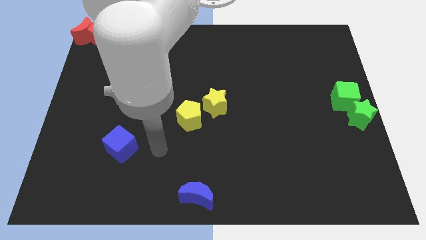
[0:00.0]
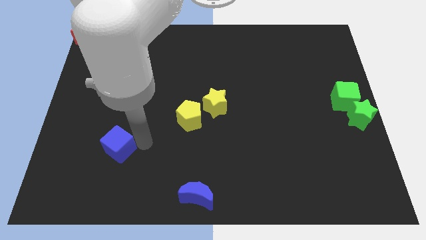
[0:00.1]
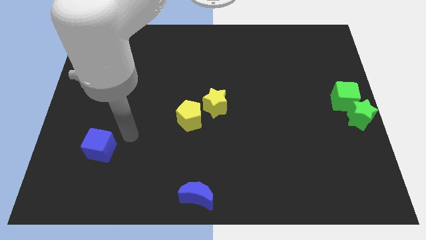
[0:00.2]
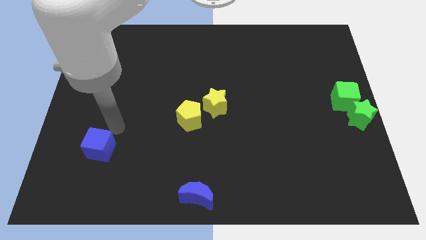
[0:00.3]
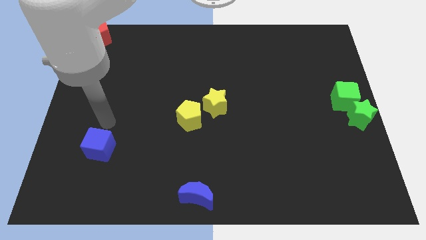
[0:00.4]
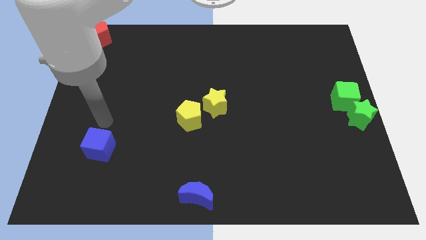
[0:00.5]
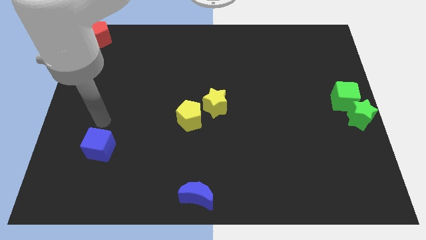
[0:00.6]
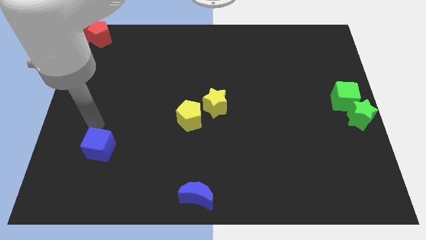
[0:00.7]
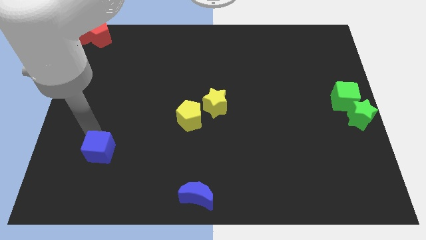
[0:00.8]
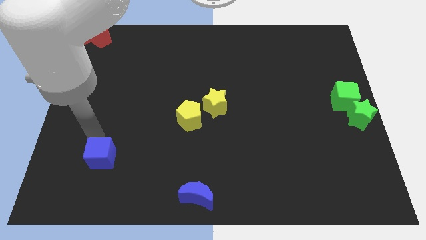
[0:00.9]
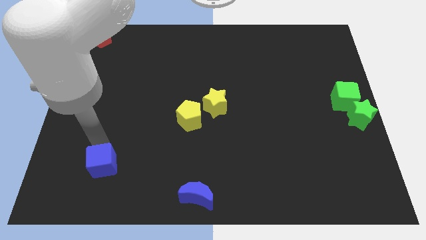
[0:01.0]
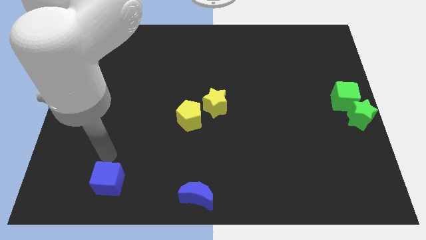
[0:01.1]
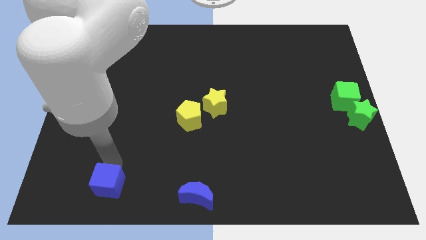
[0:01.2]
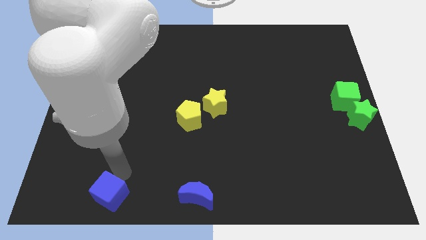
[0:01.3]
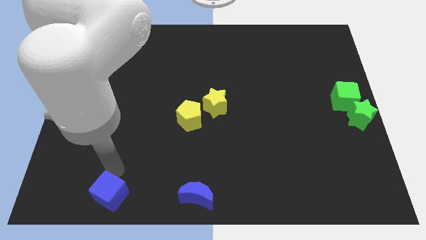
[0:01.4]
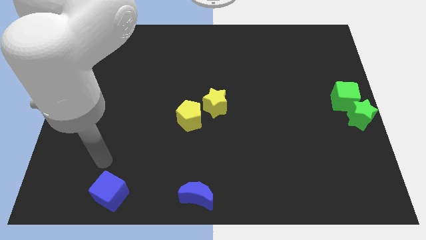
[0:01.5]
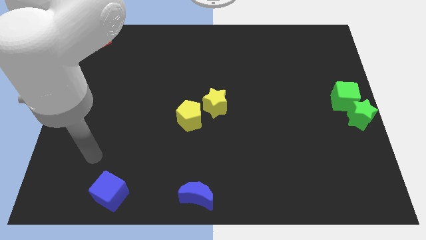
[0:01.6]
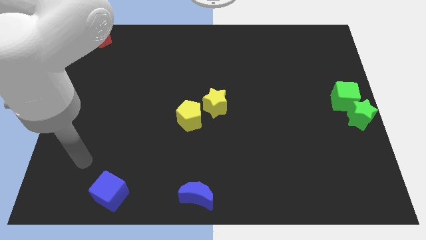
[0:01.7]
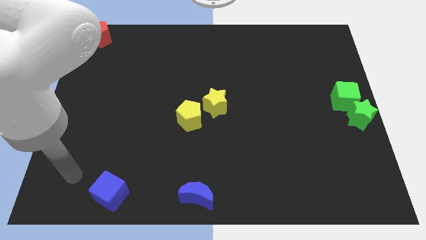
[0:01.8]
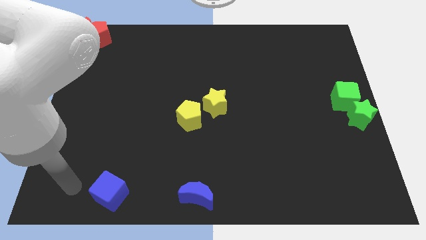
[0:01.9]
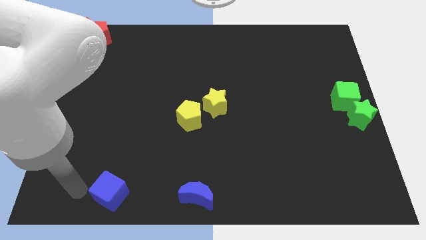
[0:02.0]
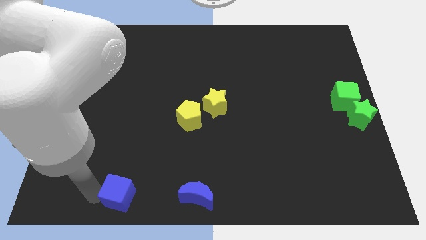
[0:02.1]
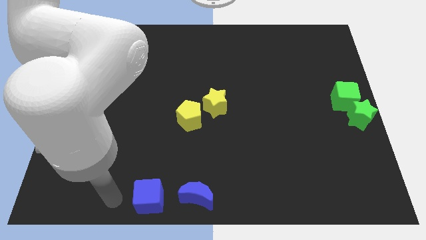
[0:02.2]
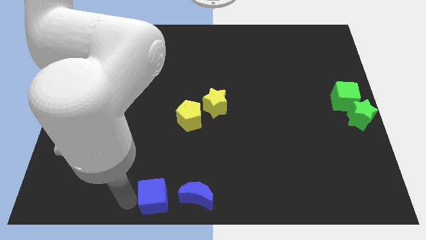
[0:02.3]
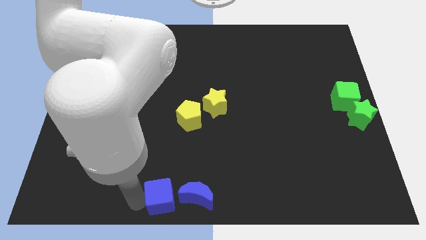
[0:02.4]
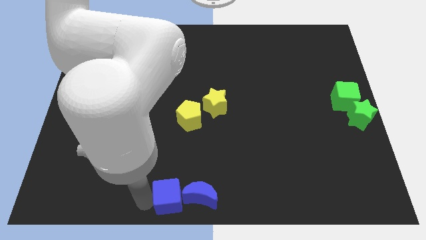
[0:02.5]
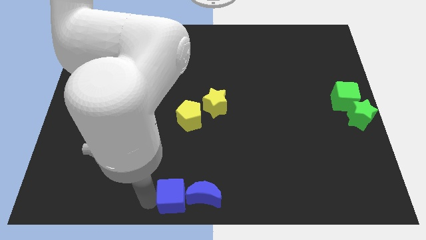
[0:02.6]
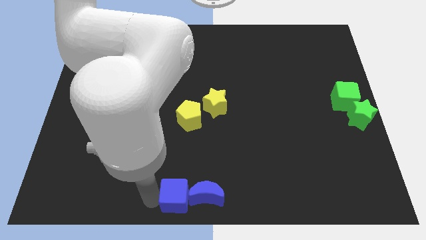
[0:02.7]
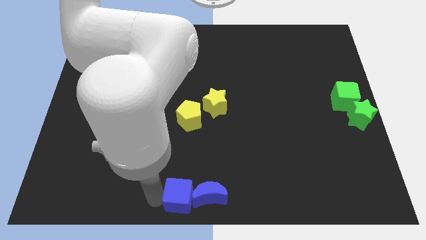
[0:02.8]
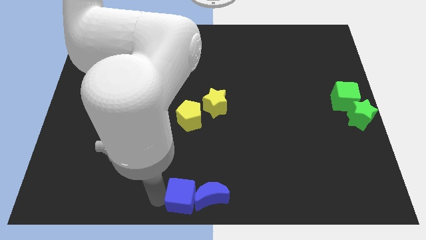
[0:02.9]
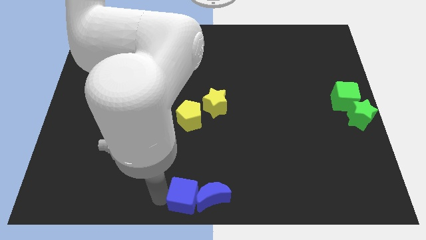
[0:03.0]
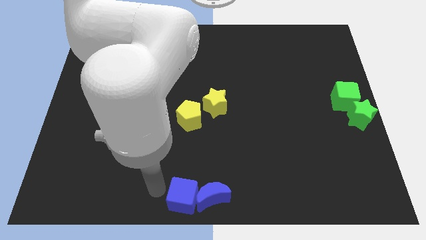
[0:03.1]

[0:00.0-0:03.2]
push the blue cube into the left of the blue crescent

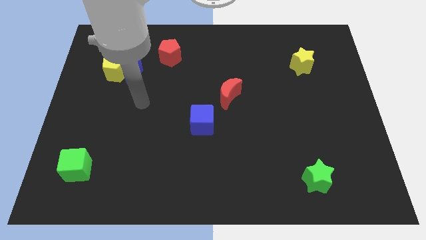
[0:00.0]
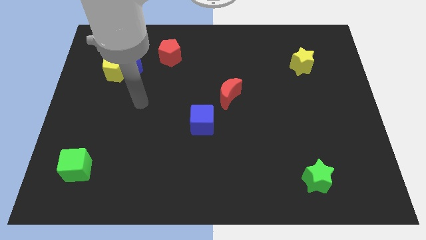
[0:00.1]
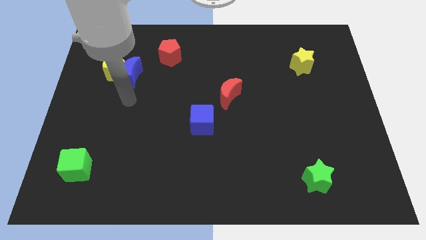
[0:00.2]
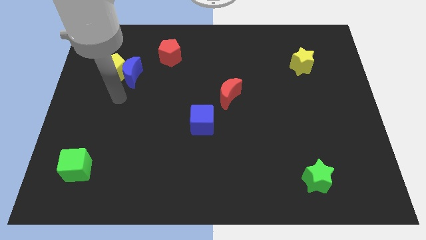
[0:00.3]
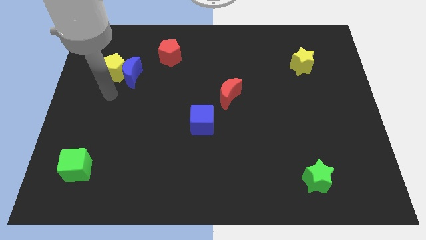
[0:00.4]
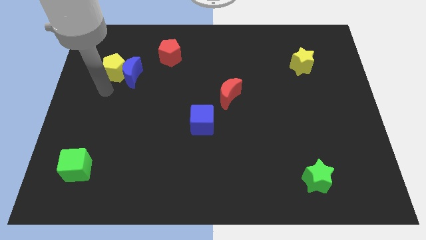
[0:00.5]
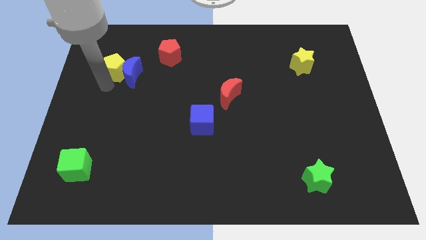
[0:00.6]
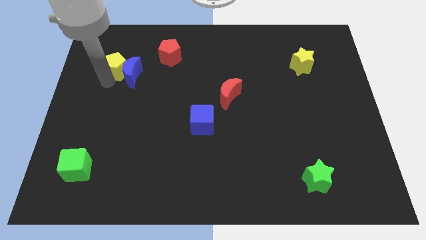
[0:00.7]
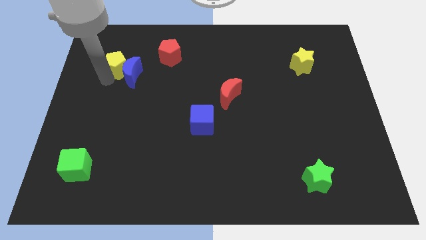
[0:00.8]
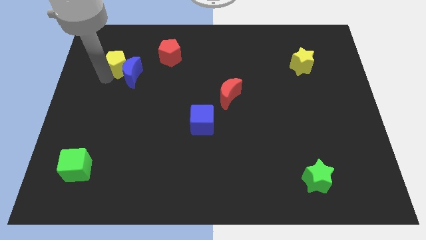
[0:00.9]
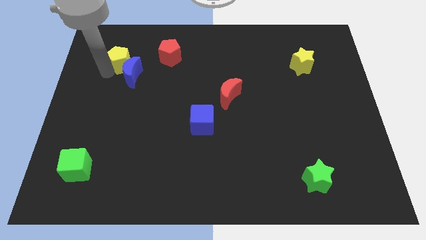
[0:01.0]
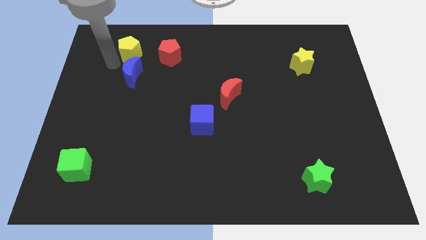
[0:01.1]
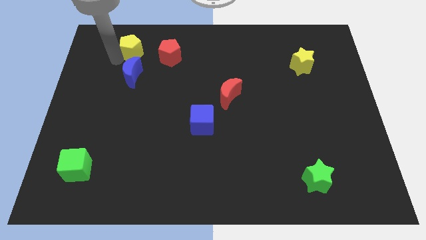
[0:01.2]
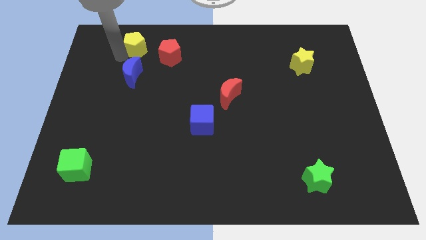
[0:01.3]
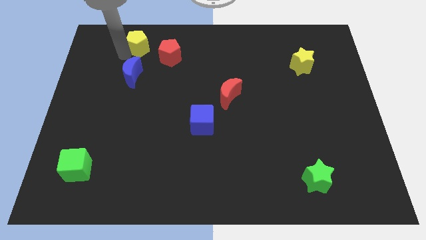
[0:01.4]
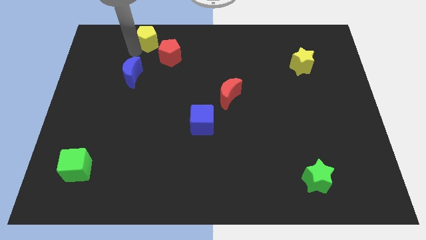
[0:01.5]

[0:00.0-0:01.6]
separate the yellow pentagon from the blue moon

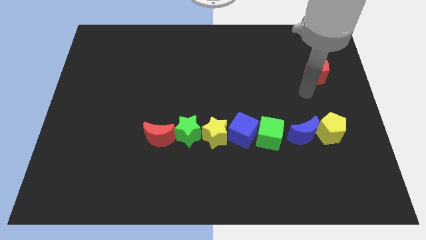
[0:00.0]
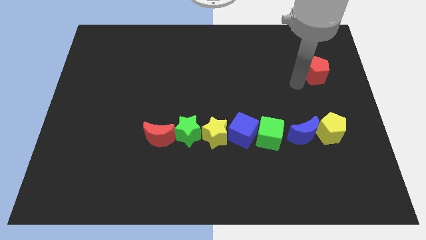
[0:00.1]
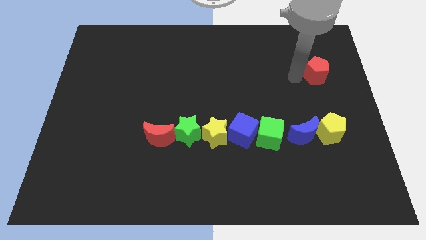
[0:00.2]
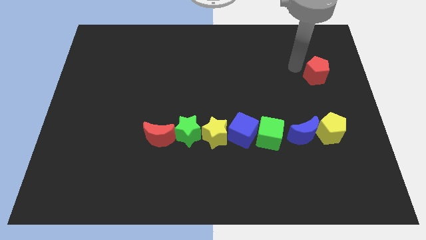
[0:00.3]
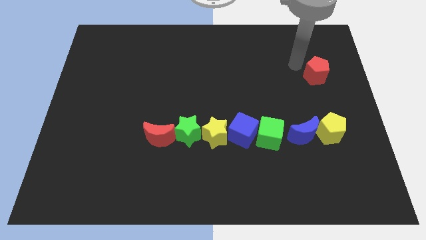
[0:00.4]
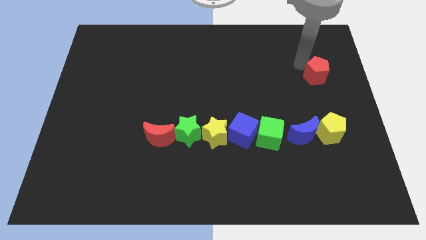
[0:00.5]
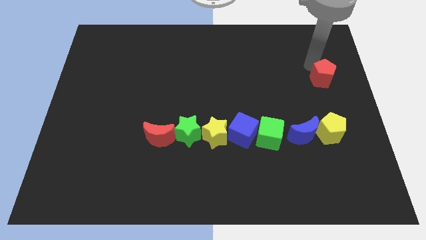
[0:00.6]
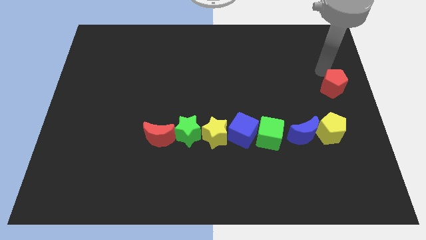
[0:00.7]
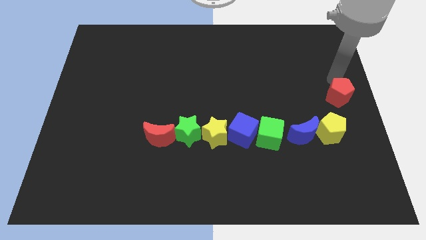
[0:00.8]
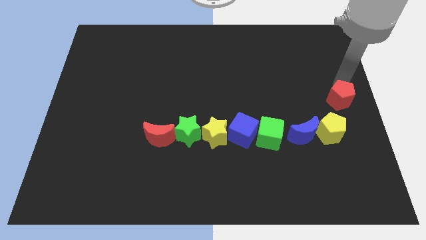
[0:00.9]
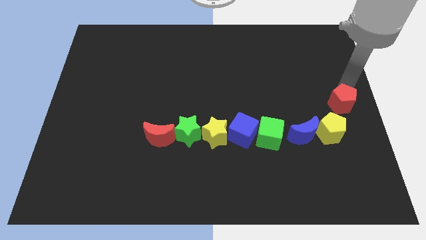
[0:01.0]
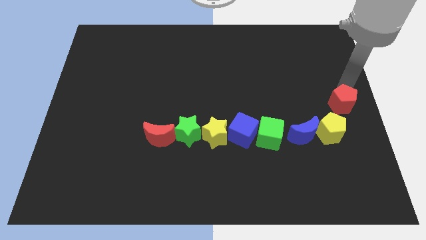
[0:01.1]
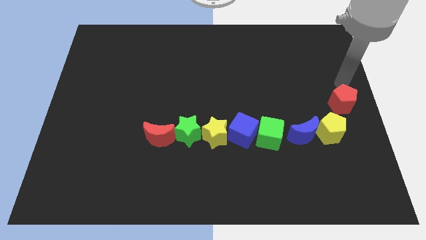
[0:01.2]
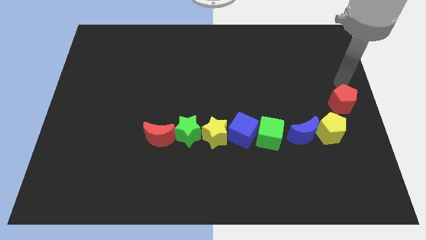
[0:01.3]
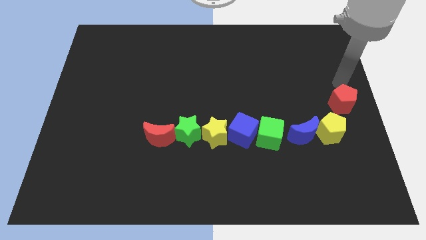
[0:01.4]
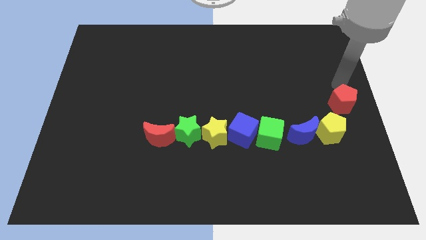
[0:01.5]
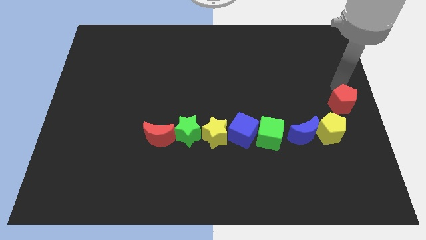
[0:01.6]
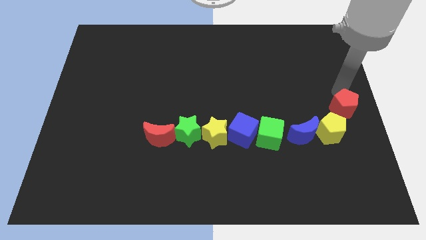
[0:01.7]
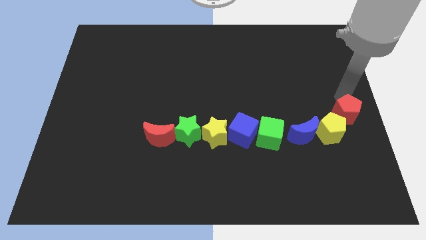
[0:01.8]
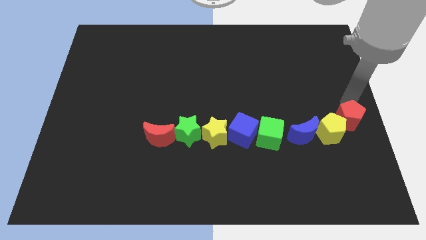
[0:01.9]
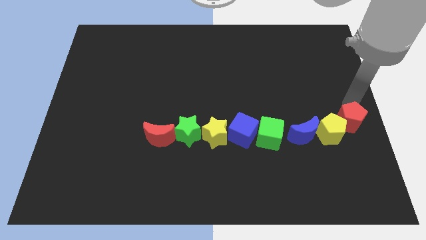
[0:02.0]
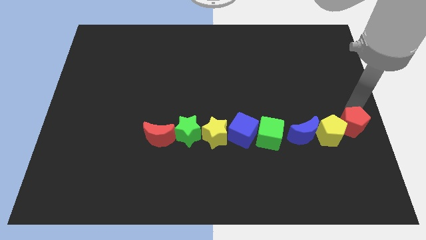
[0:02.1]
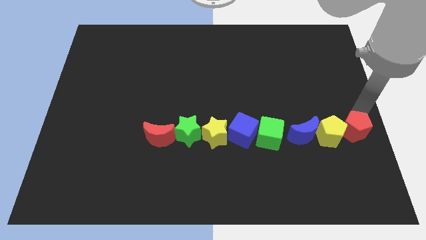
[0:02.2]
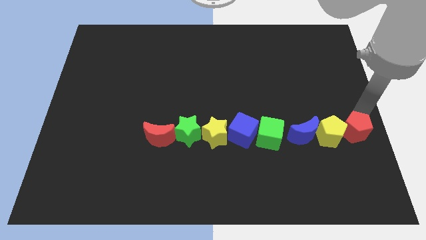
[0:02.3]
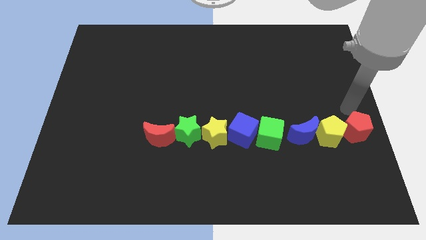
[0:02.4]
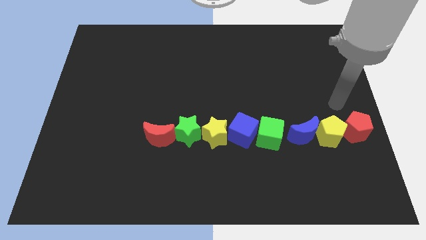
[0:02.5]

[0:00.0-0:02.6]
push the red pentagon to the right of the yellow pentagon

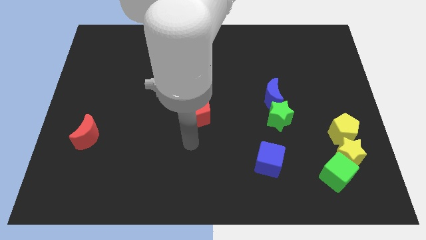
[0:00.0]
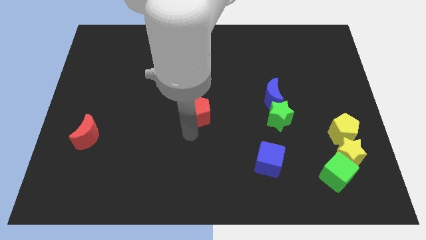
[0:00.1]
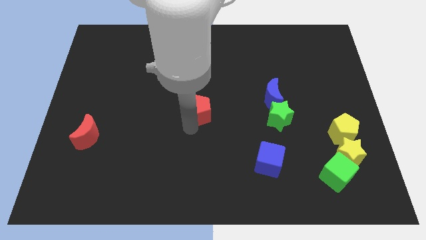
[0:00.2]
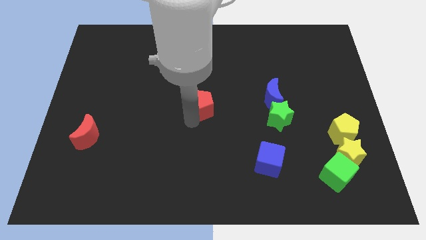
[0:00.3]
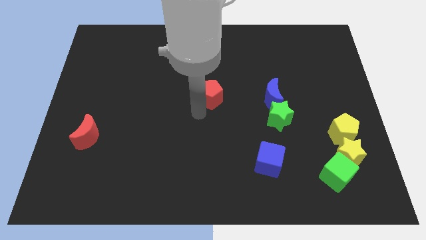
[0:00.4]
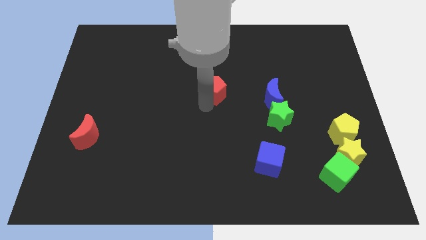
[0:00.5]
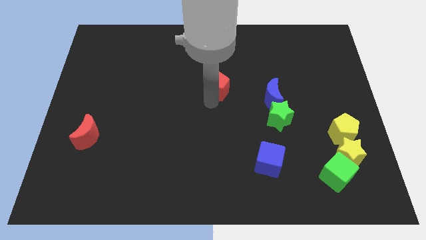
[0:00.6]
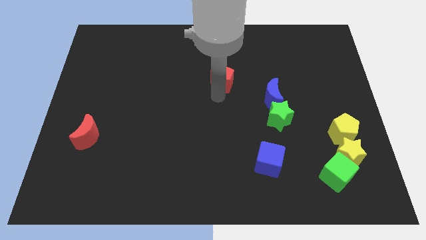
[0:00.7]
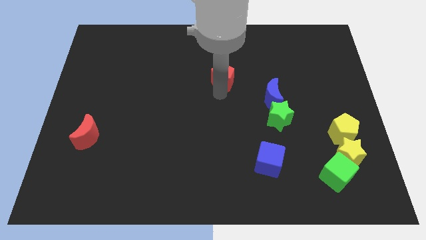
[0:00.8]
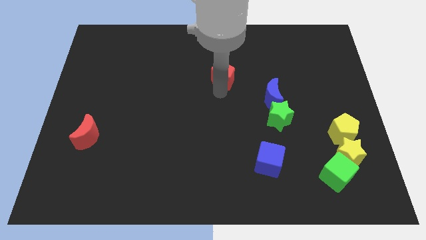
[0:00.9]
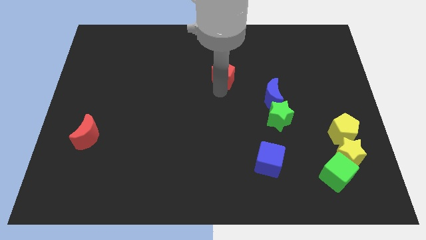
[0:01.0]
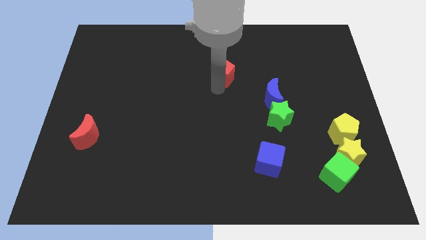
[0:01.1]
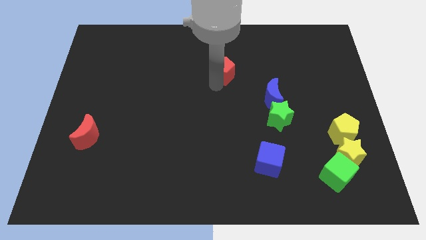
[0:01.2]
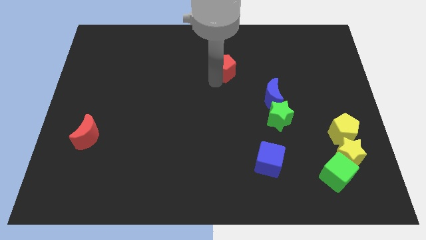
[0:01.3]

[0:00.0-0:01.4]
push the red pentagon towards the top of the board
